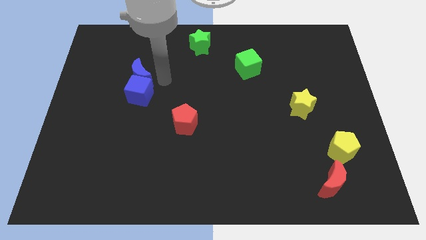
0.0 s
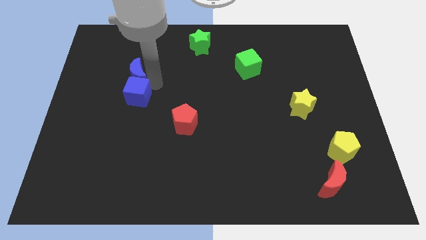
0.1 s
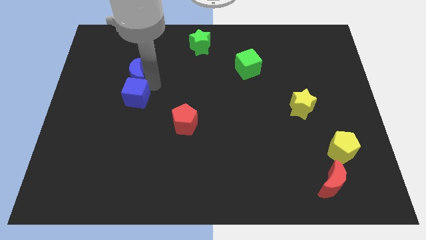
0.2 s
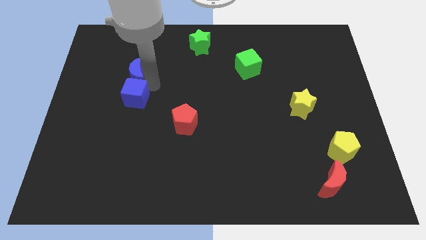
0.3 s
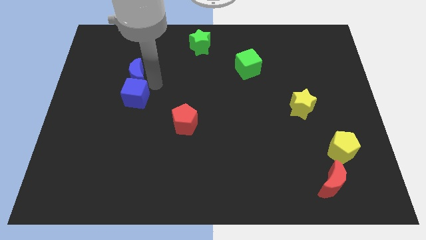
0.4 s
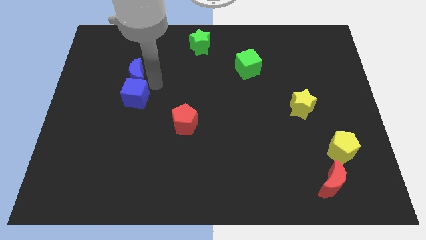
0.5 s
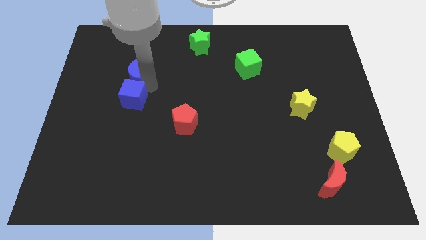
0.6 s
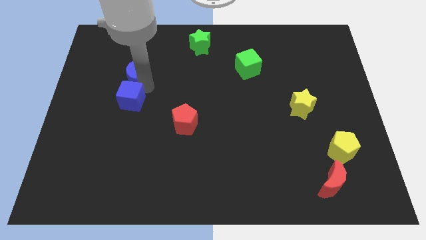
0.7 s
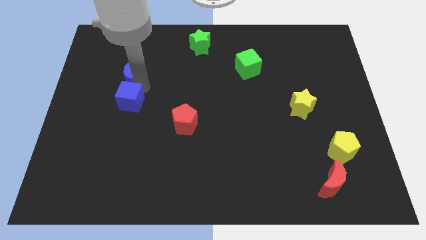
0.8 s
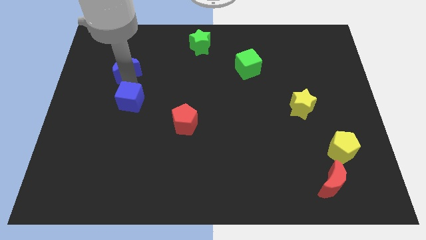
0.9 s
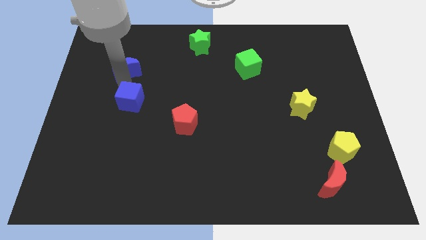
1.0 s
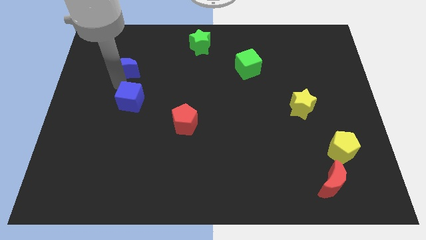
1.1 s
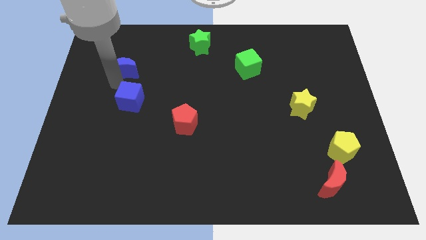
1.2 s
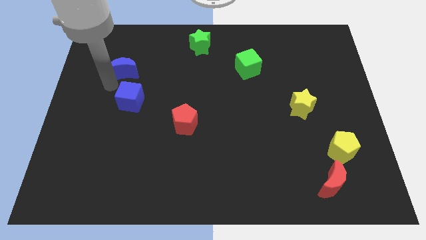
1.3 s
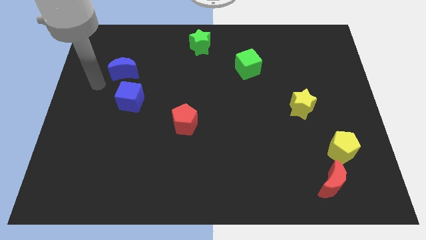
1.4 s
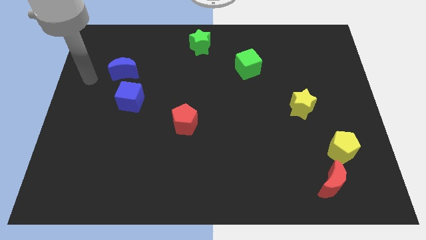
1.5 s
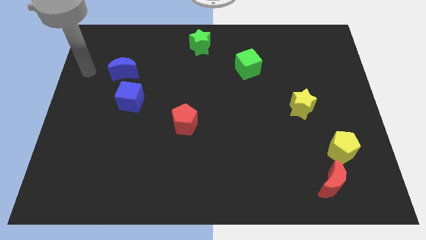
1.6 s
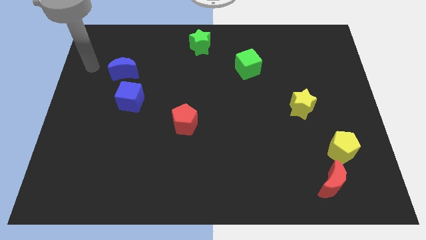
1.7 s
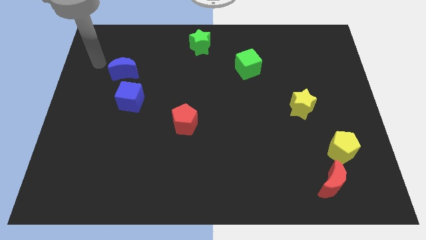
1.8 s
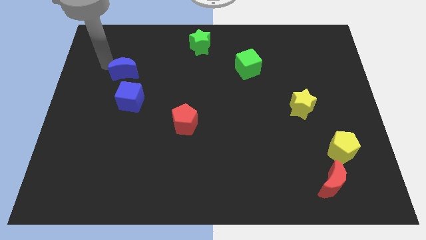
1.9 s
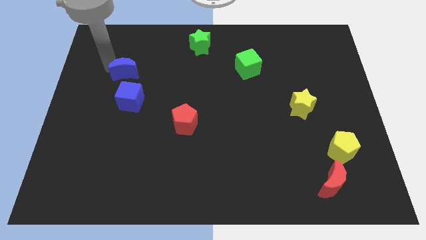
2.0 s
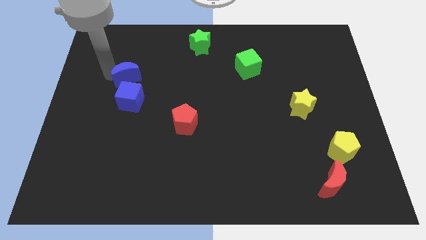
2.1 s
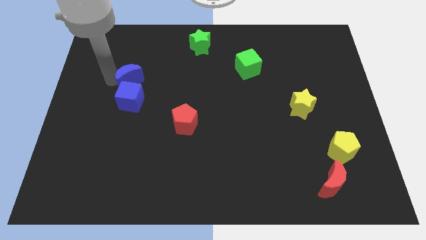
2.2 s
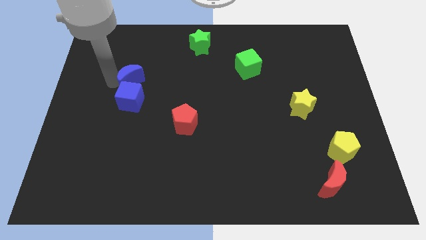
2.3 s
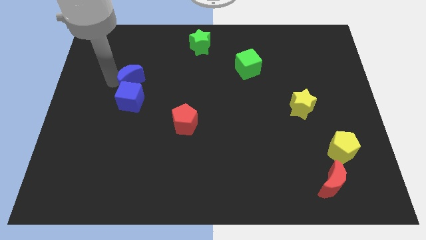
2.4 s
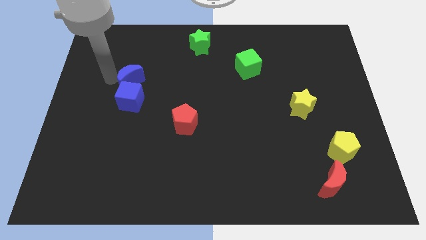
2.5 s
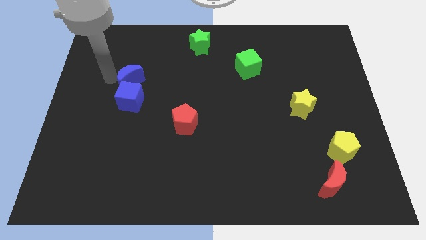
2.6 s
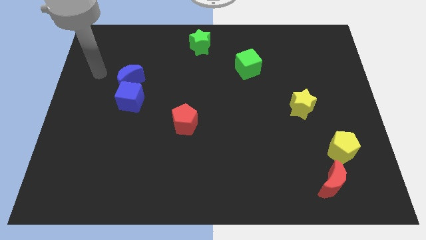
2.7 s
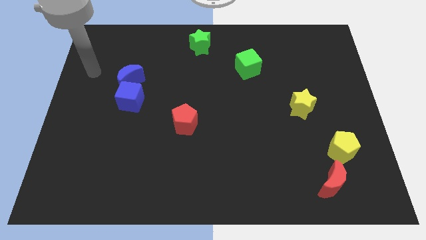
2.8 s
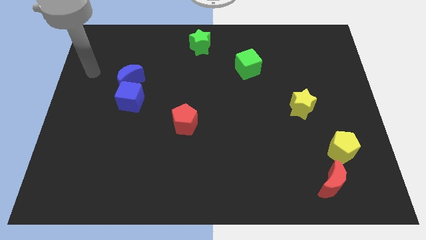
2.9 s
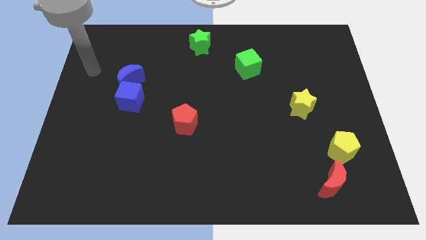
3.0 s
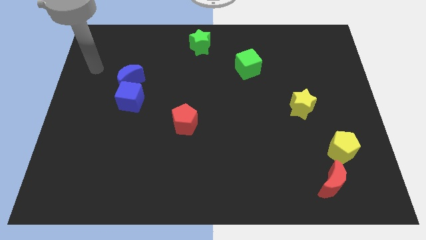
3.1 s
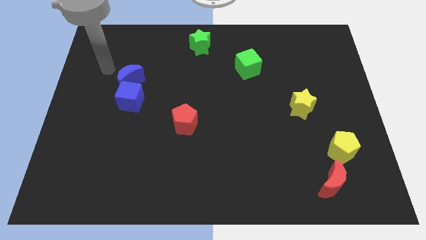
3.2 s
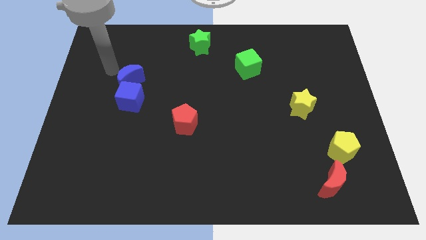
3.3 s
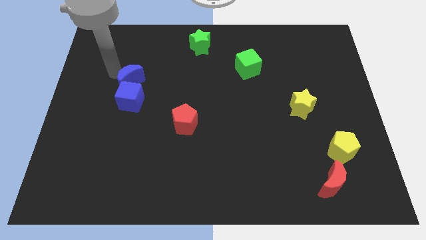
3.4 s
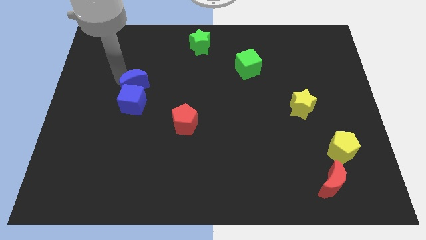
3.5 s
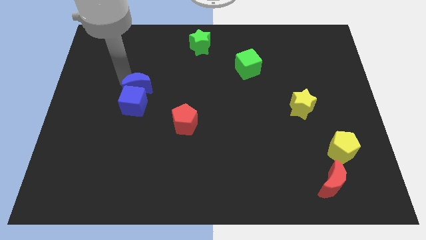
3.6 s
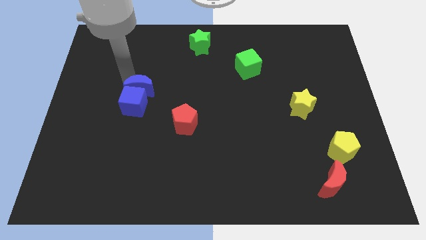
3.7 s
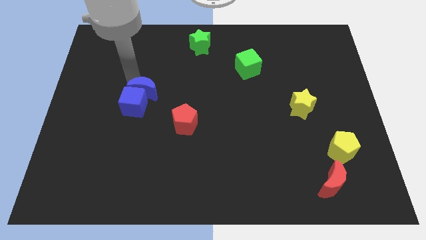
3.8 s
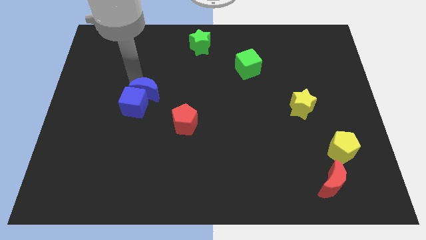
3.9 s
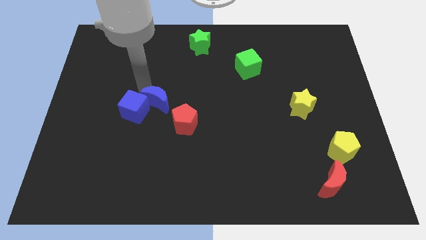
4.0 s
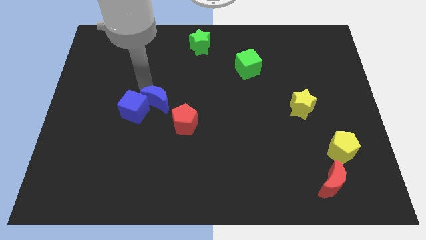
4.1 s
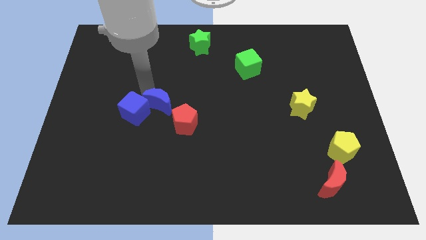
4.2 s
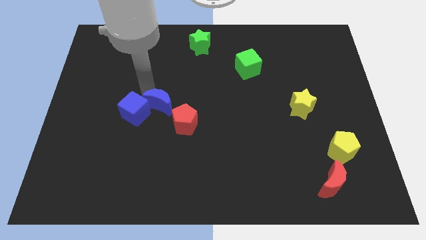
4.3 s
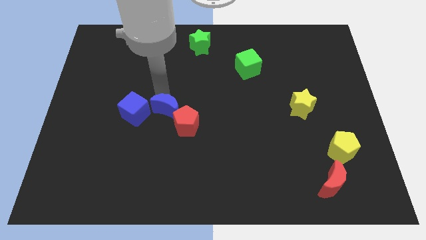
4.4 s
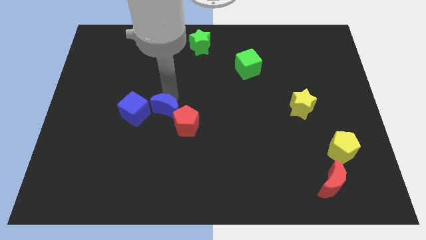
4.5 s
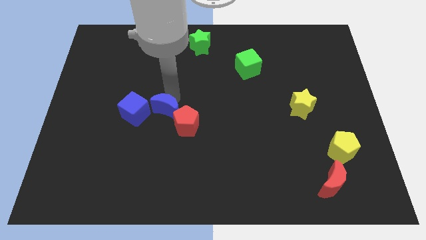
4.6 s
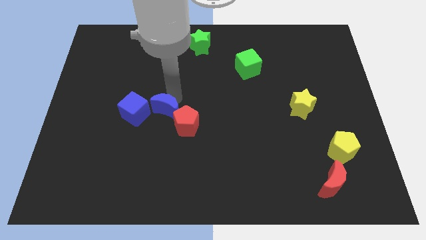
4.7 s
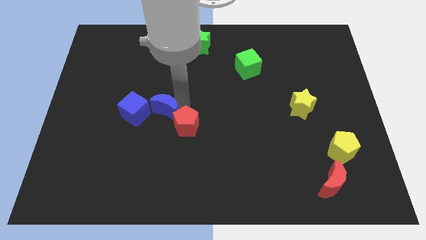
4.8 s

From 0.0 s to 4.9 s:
move the blue blocks to the left of the red pentagon

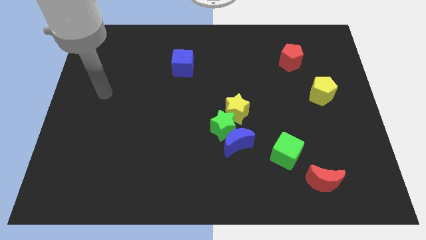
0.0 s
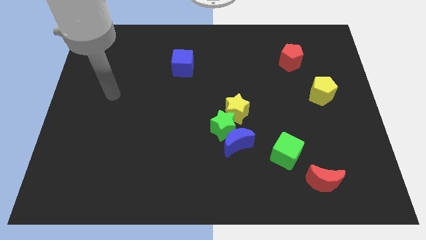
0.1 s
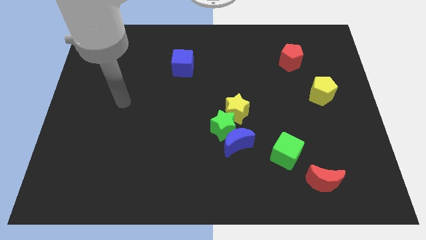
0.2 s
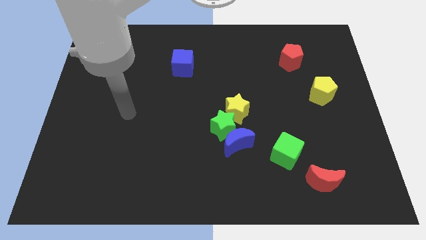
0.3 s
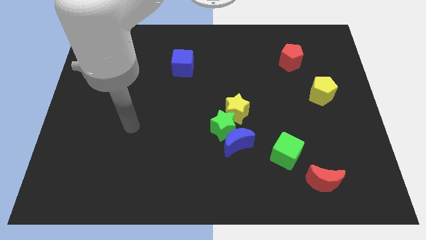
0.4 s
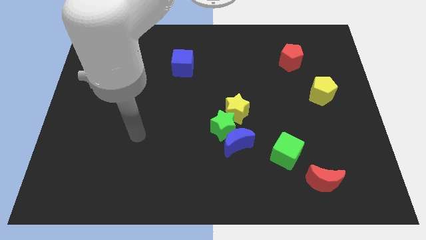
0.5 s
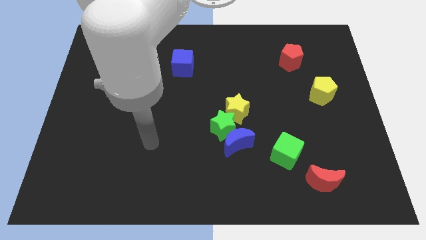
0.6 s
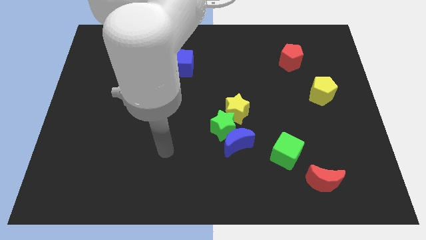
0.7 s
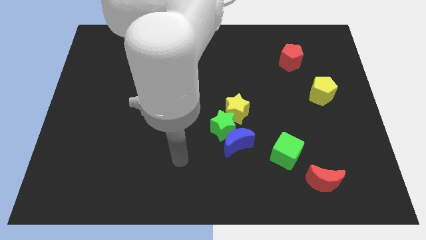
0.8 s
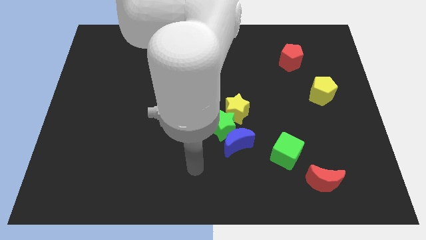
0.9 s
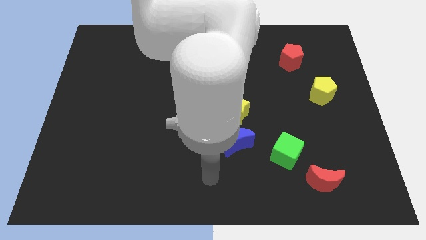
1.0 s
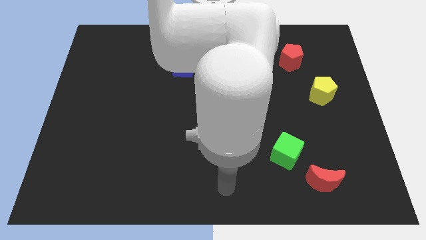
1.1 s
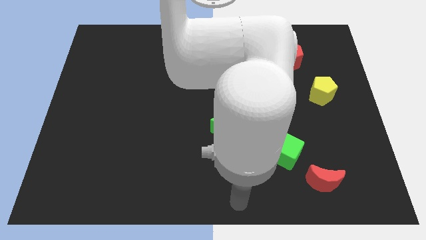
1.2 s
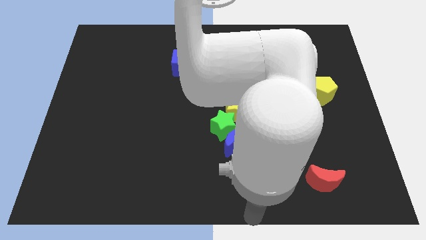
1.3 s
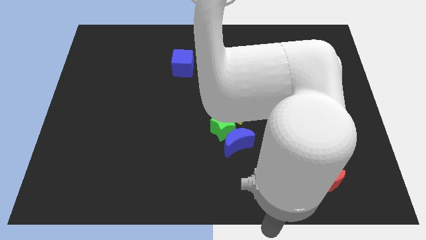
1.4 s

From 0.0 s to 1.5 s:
move your hand to the bottom side

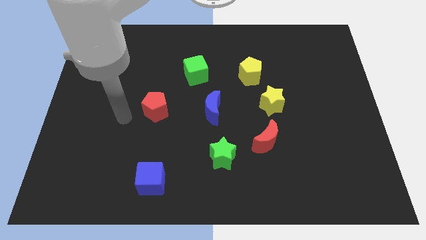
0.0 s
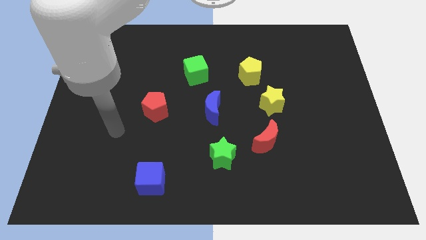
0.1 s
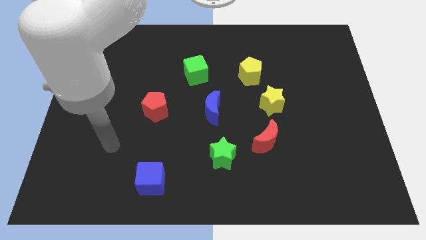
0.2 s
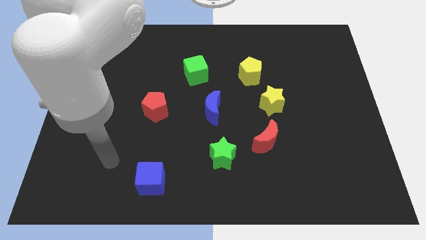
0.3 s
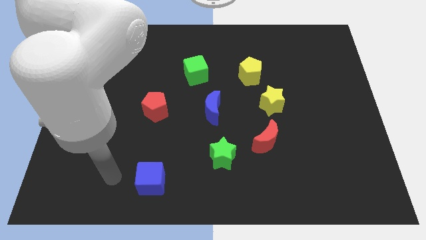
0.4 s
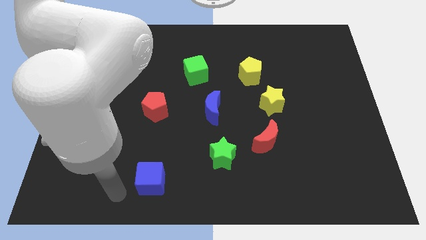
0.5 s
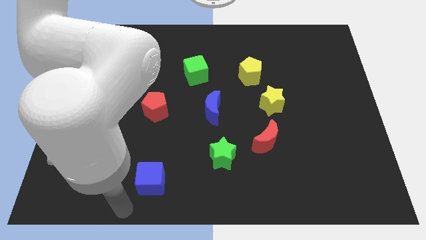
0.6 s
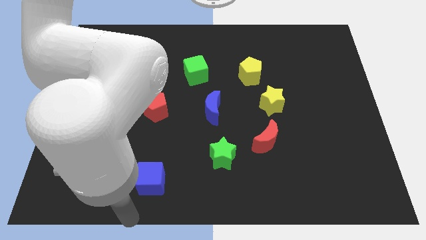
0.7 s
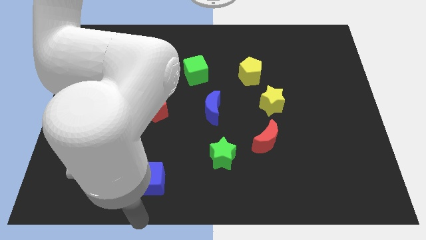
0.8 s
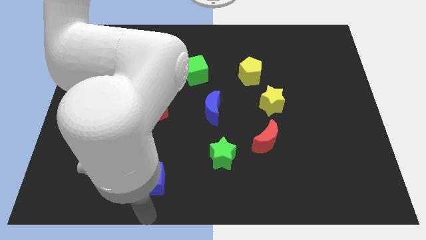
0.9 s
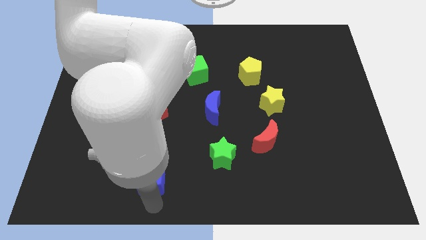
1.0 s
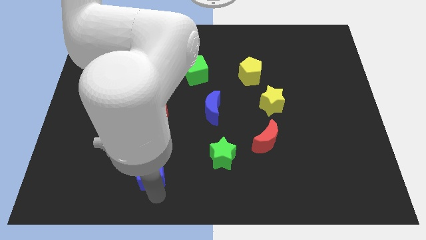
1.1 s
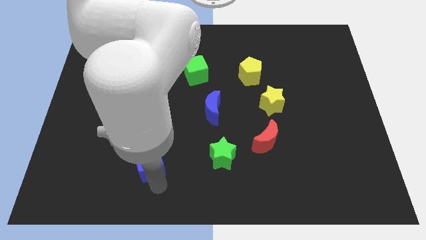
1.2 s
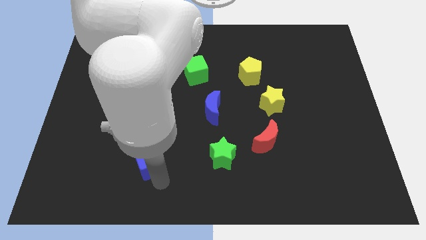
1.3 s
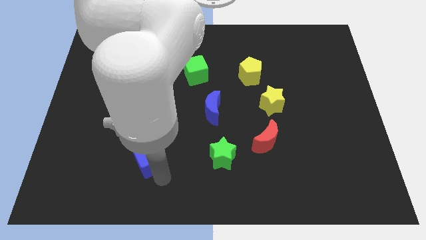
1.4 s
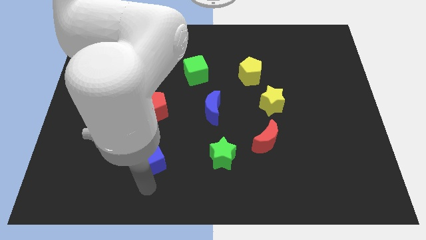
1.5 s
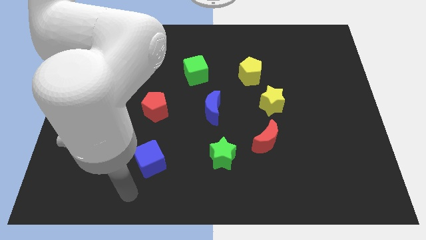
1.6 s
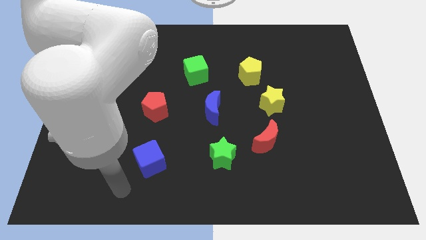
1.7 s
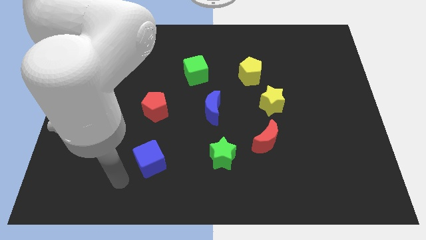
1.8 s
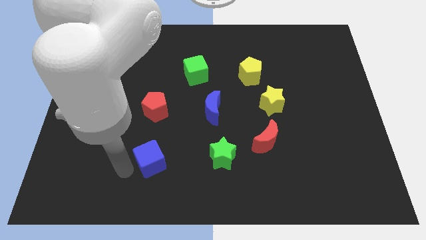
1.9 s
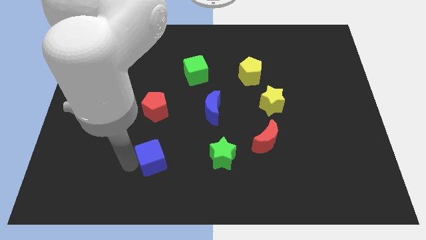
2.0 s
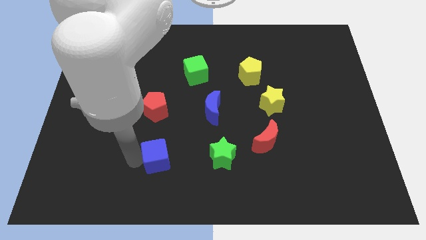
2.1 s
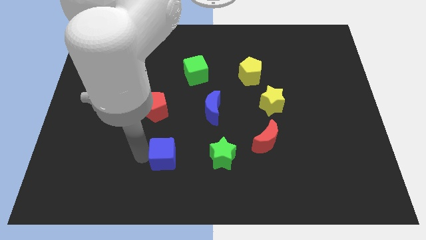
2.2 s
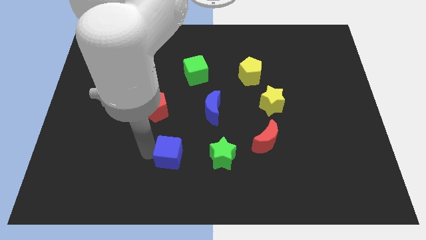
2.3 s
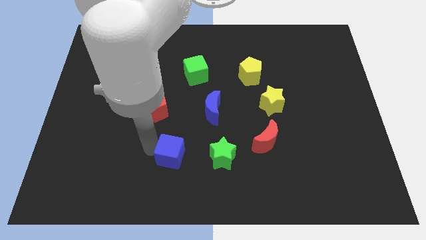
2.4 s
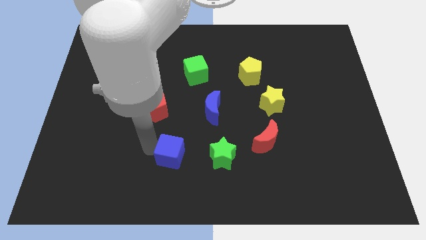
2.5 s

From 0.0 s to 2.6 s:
move the blue cube up slightly
